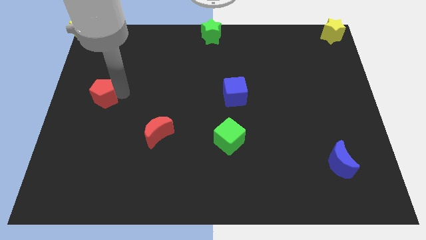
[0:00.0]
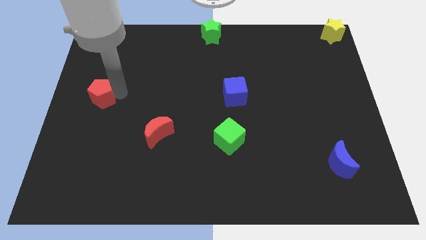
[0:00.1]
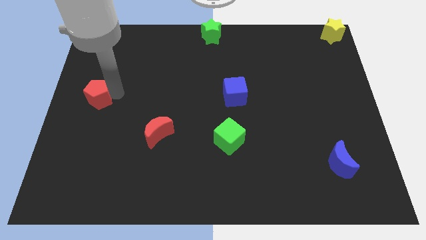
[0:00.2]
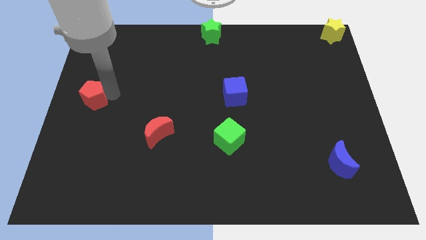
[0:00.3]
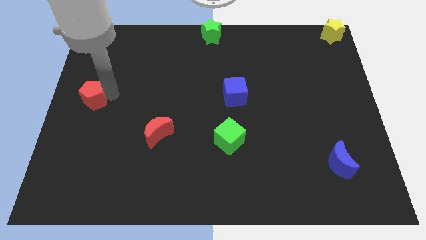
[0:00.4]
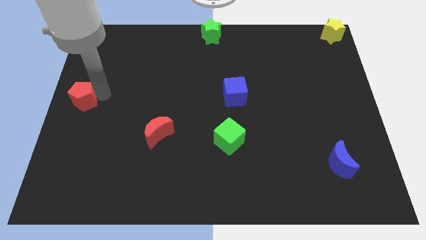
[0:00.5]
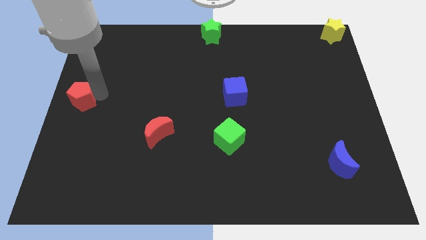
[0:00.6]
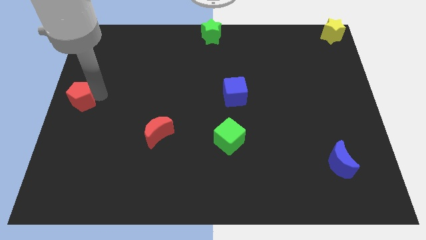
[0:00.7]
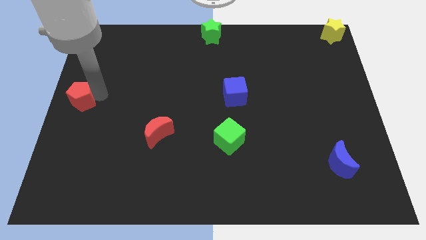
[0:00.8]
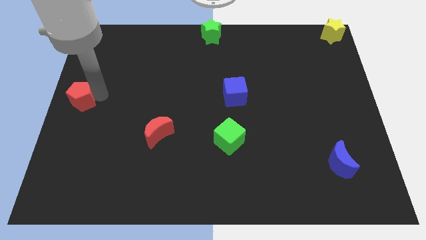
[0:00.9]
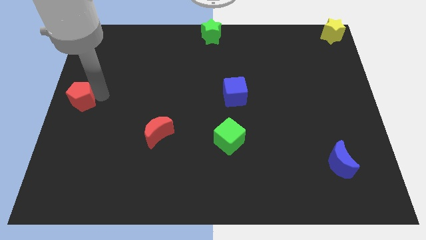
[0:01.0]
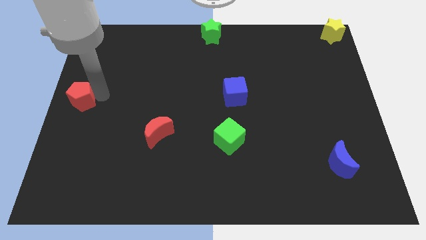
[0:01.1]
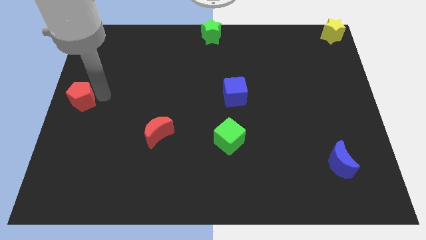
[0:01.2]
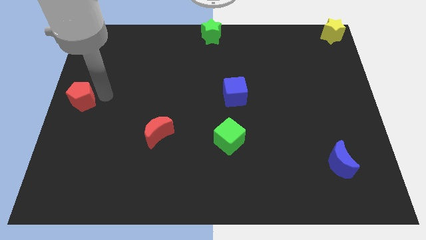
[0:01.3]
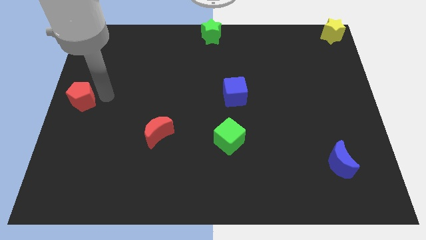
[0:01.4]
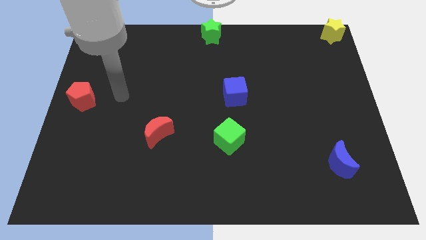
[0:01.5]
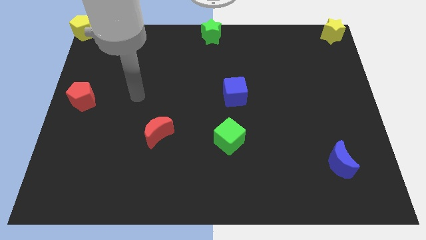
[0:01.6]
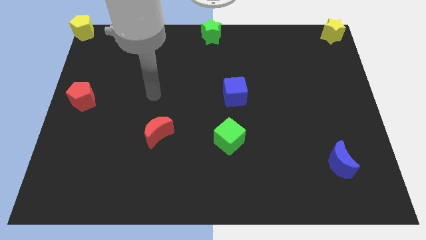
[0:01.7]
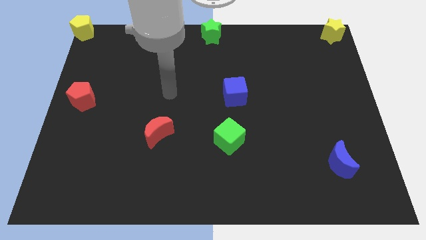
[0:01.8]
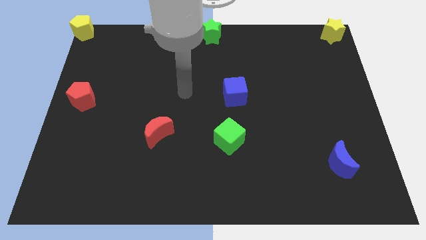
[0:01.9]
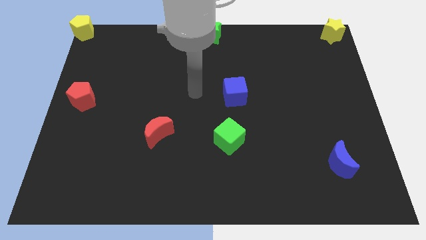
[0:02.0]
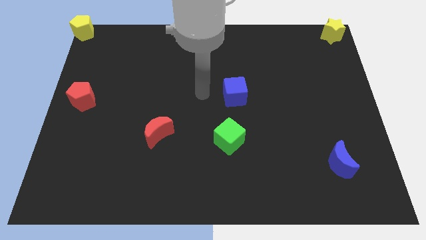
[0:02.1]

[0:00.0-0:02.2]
place the red pentagon at the left center of the board

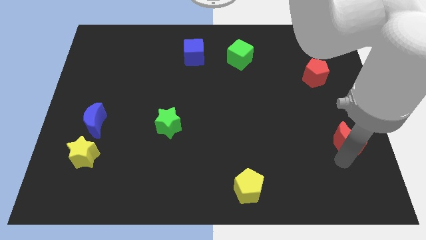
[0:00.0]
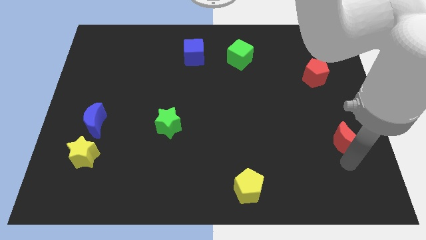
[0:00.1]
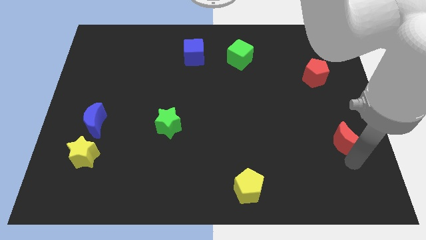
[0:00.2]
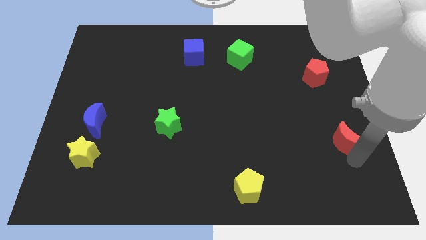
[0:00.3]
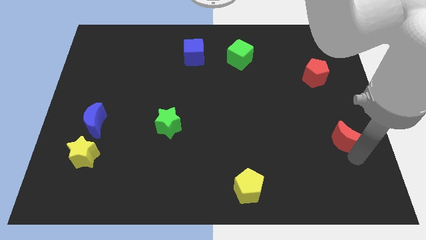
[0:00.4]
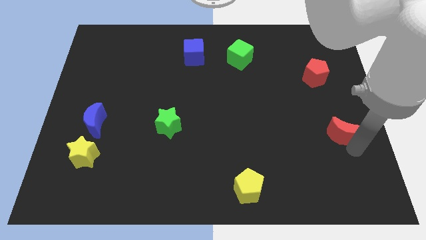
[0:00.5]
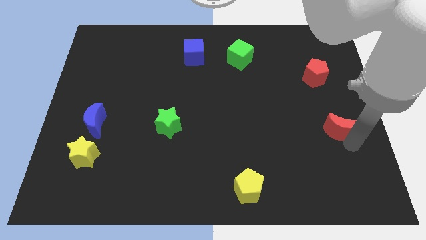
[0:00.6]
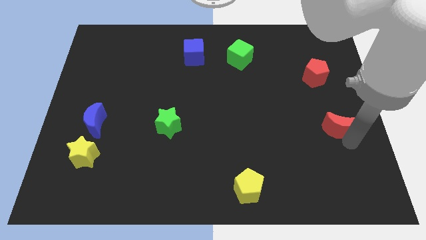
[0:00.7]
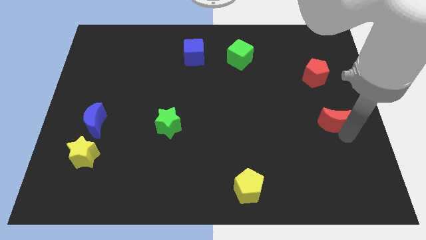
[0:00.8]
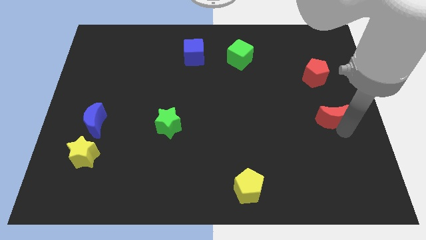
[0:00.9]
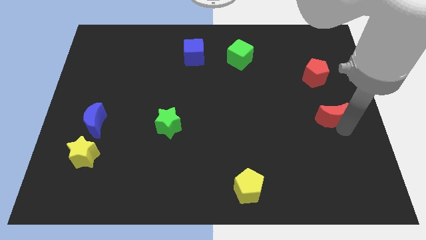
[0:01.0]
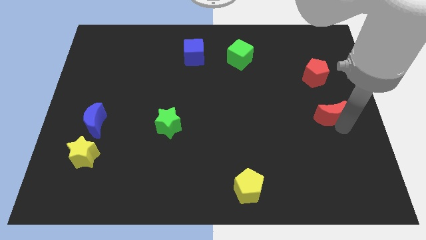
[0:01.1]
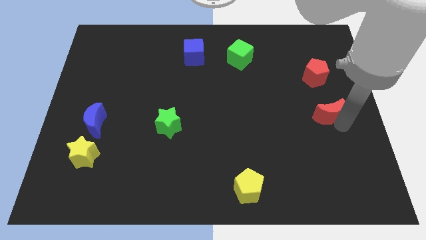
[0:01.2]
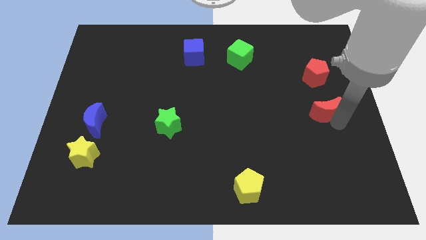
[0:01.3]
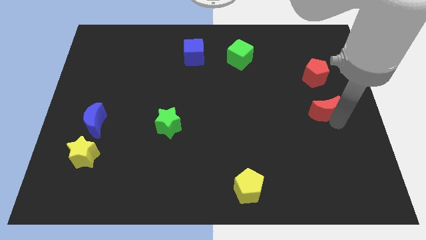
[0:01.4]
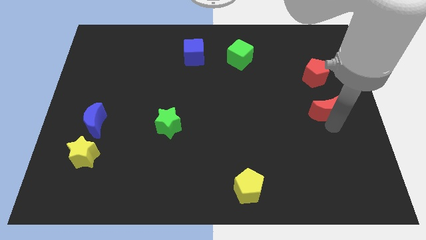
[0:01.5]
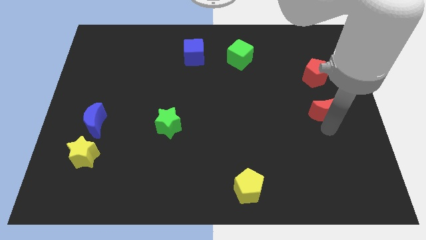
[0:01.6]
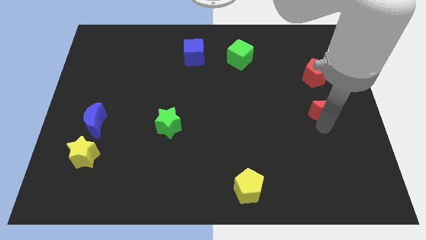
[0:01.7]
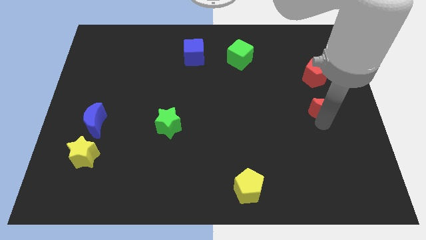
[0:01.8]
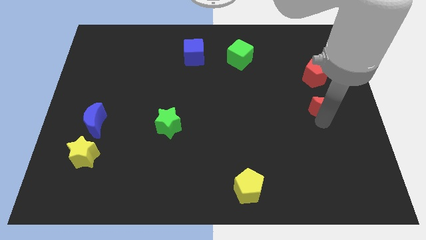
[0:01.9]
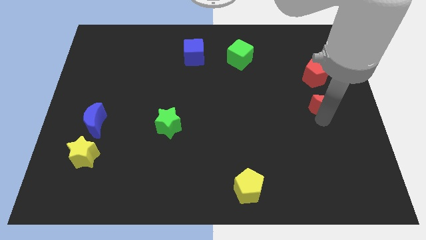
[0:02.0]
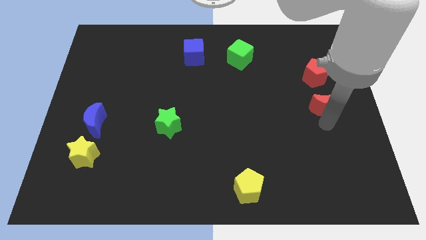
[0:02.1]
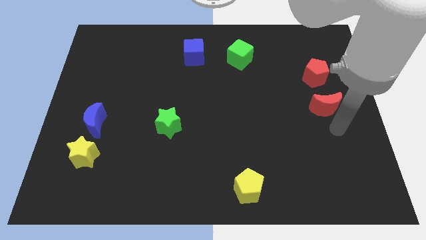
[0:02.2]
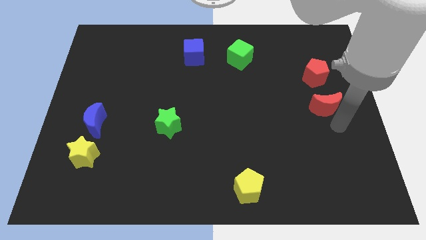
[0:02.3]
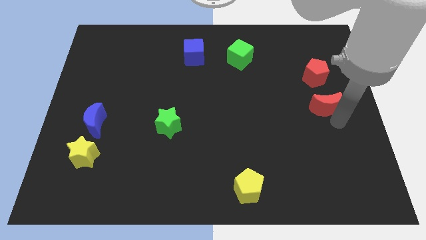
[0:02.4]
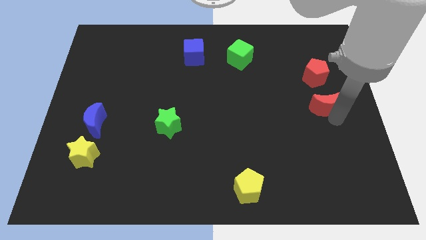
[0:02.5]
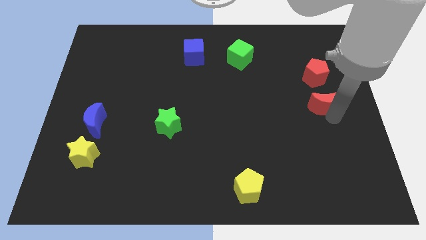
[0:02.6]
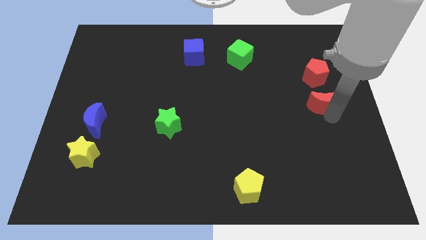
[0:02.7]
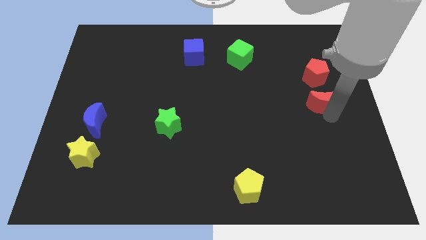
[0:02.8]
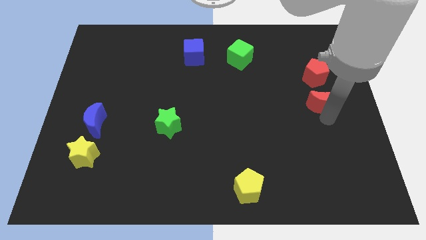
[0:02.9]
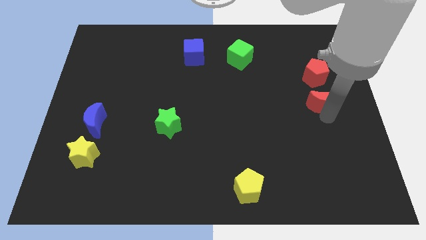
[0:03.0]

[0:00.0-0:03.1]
slide the red moon slightly towards the red pentagon

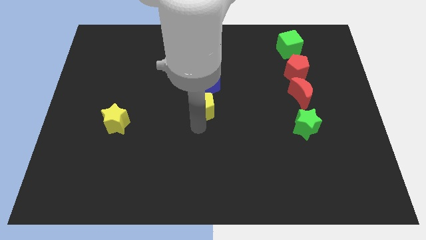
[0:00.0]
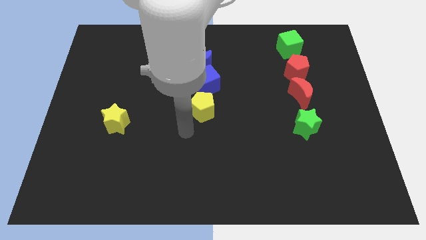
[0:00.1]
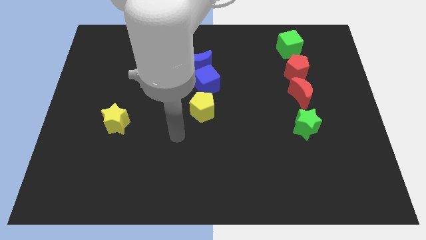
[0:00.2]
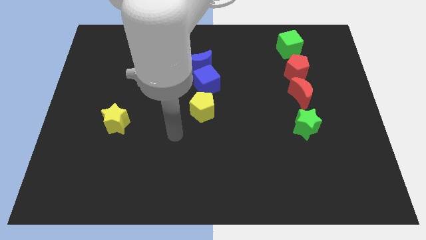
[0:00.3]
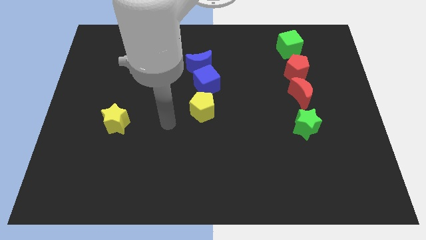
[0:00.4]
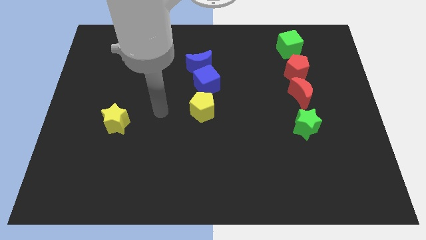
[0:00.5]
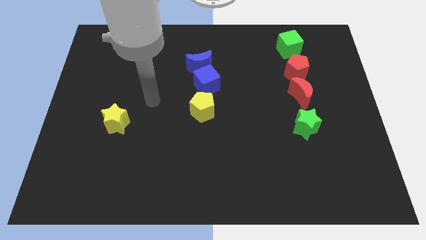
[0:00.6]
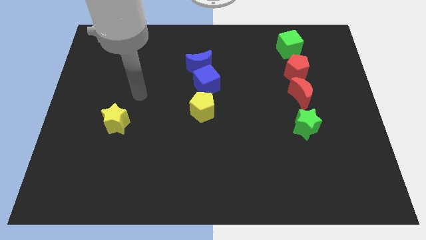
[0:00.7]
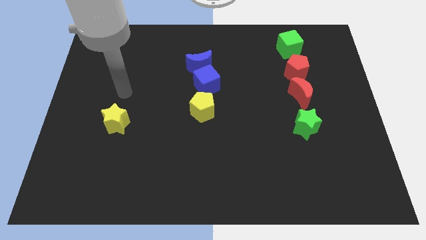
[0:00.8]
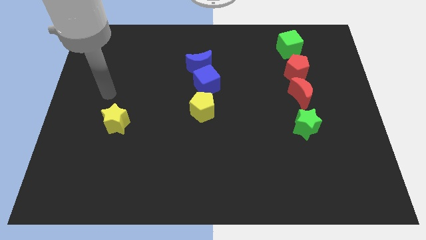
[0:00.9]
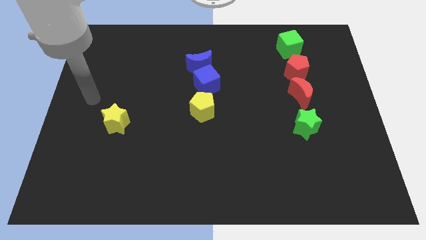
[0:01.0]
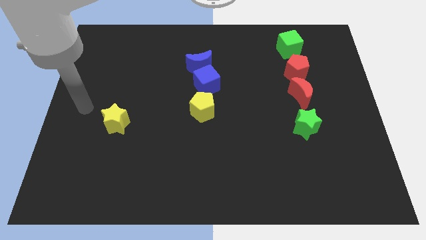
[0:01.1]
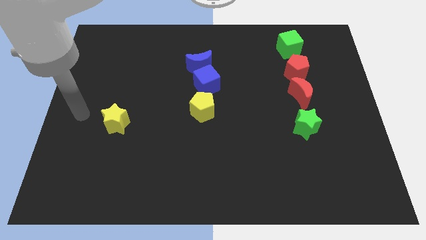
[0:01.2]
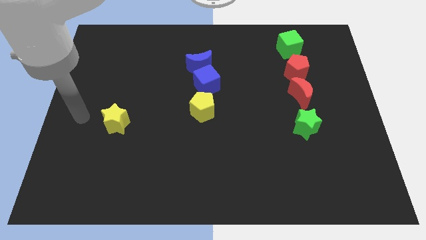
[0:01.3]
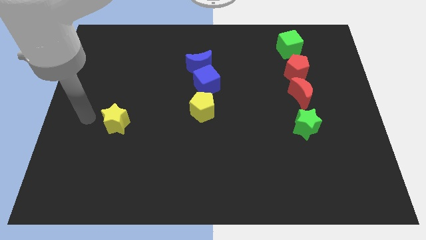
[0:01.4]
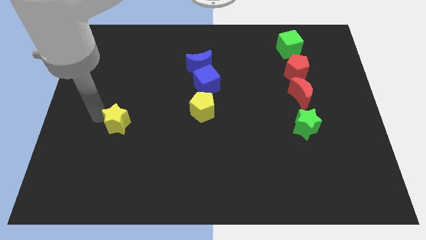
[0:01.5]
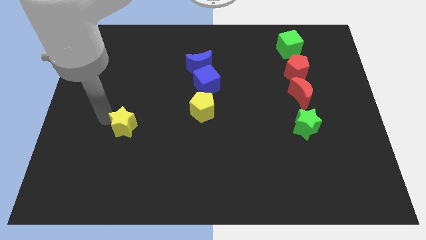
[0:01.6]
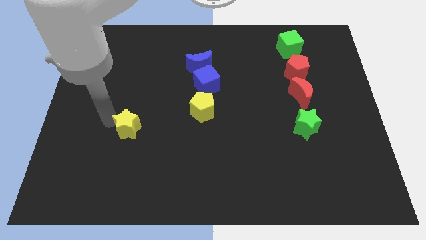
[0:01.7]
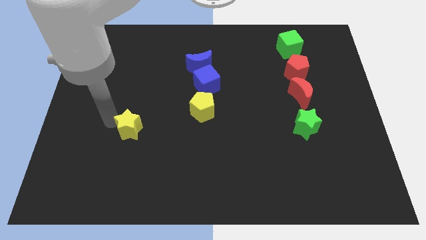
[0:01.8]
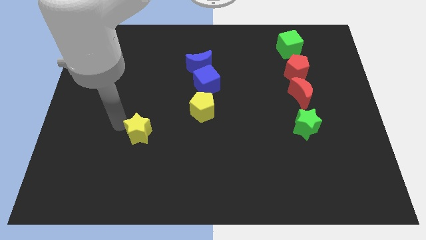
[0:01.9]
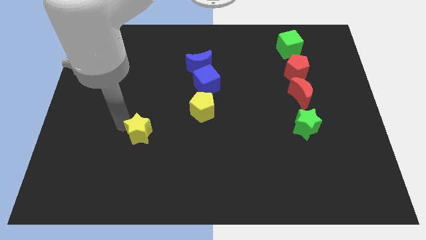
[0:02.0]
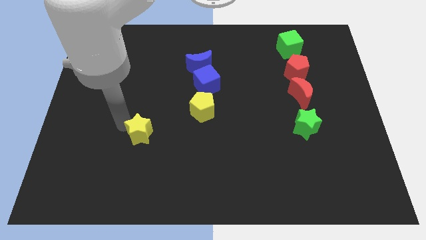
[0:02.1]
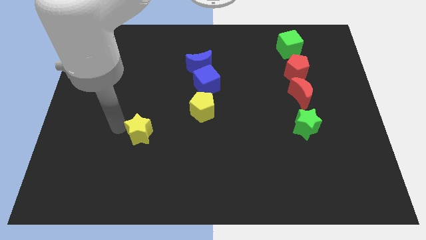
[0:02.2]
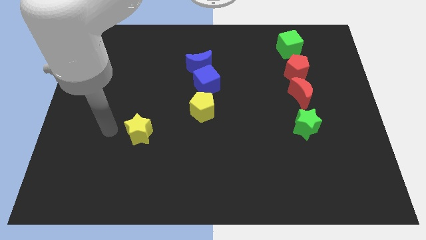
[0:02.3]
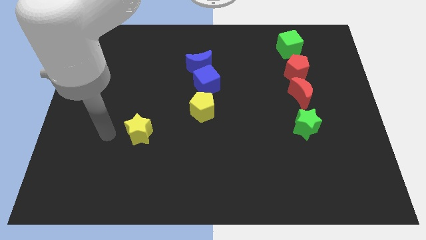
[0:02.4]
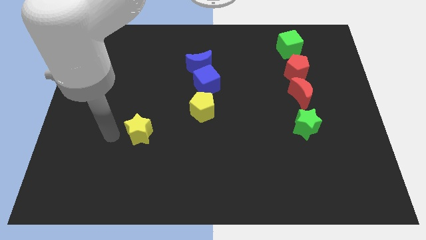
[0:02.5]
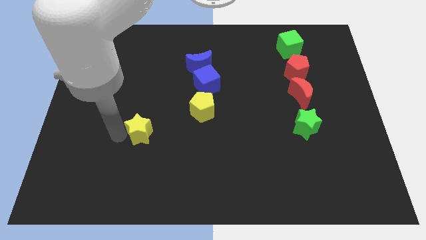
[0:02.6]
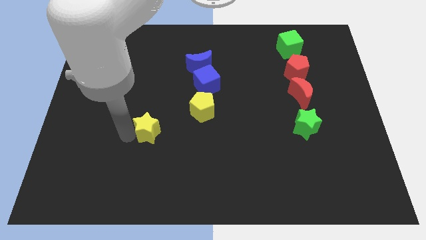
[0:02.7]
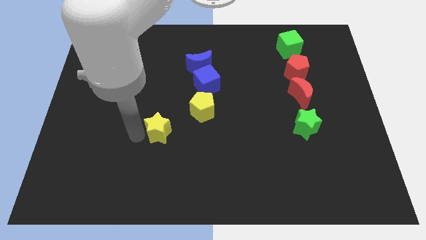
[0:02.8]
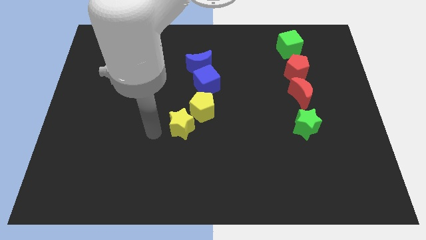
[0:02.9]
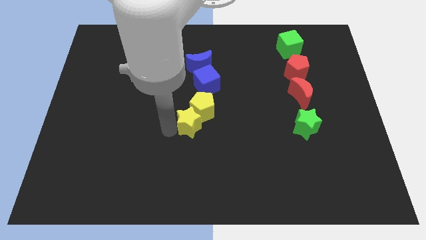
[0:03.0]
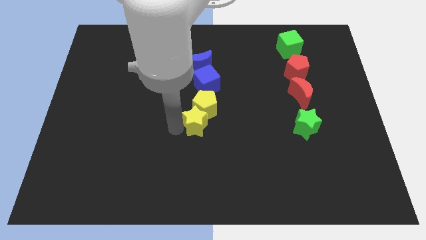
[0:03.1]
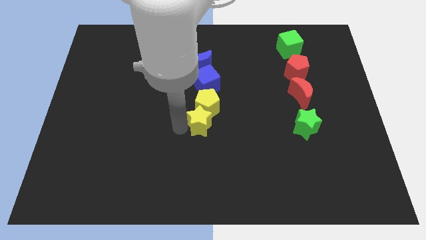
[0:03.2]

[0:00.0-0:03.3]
move the yellow star into the yellow pentagon

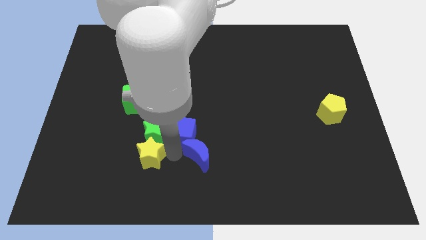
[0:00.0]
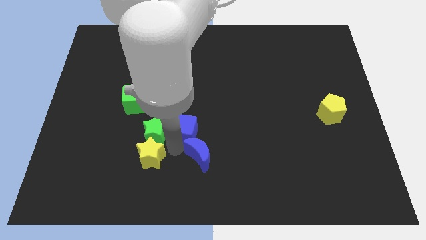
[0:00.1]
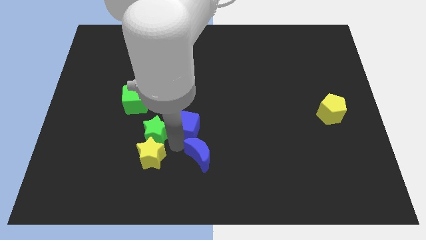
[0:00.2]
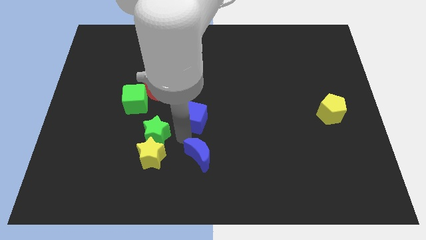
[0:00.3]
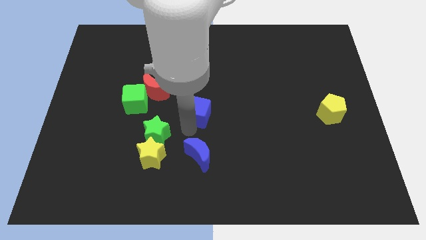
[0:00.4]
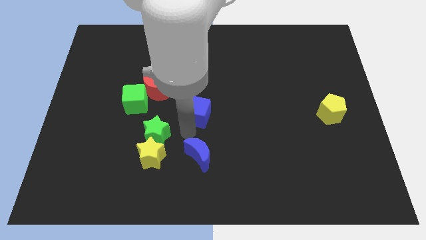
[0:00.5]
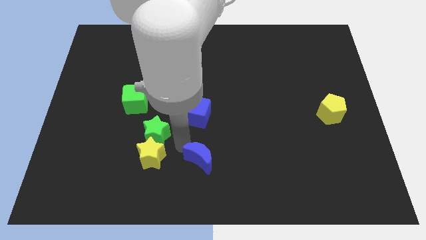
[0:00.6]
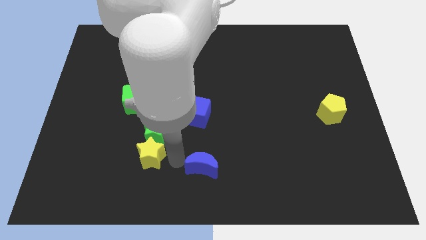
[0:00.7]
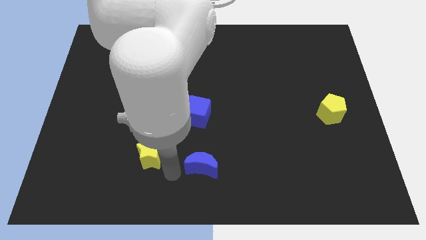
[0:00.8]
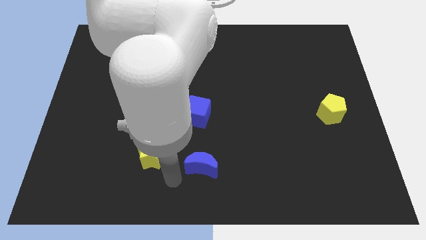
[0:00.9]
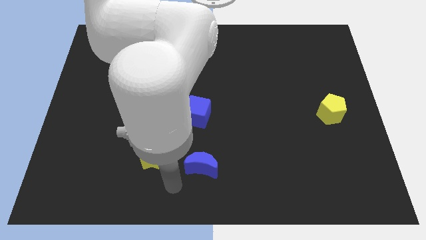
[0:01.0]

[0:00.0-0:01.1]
separate blue moon and blu cube from each other
